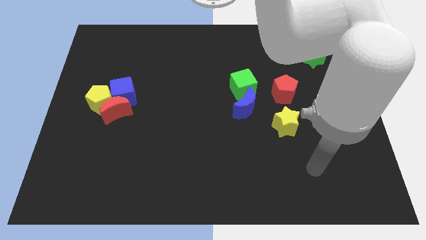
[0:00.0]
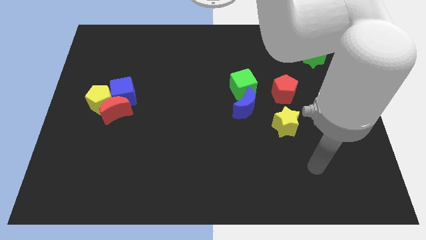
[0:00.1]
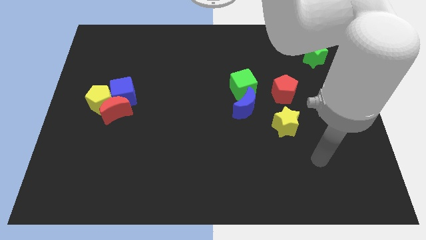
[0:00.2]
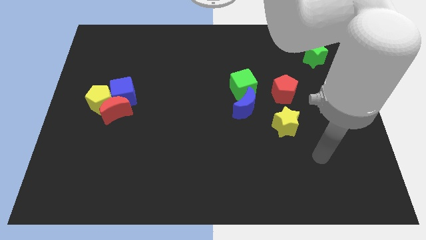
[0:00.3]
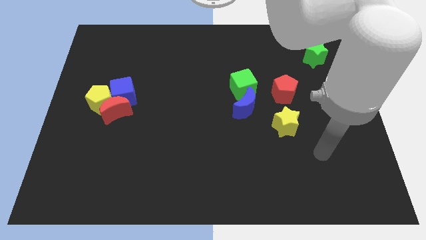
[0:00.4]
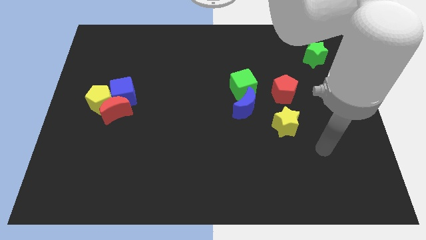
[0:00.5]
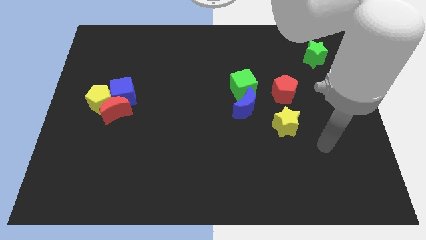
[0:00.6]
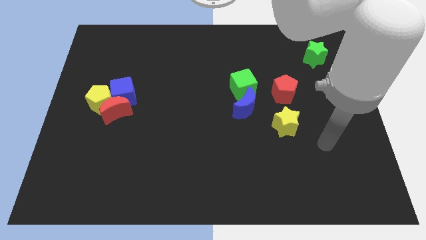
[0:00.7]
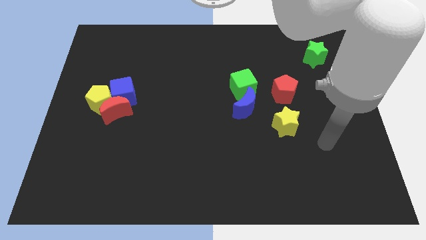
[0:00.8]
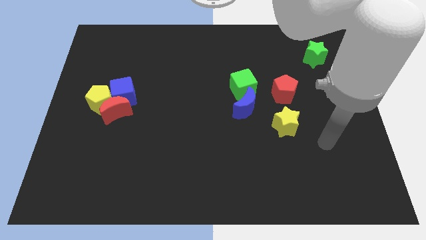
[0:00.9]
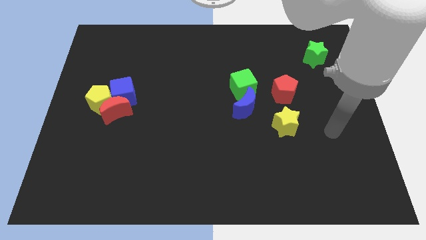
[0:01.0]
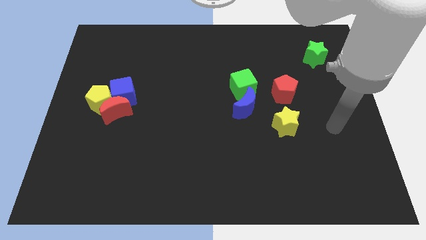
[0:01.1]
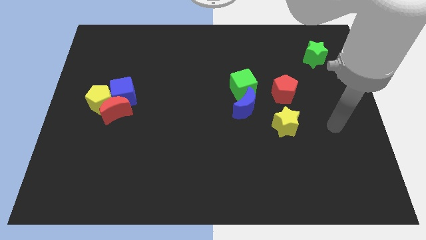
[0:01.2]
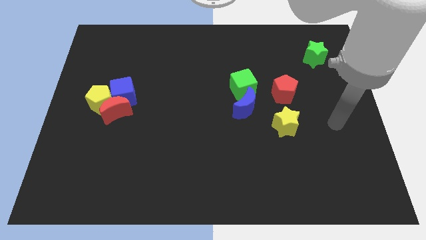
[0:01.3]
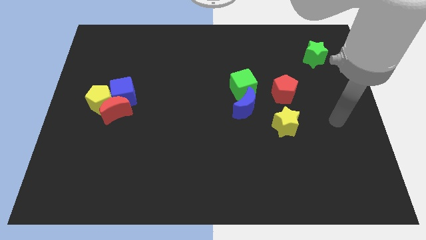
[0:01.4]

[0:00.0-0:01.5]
point your arm to the right of the yellow star

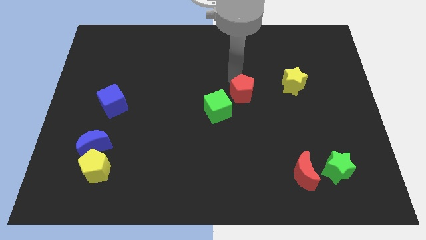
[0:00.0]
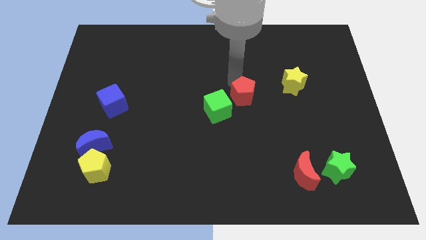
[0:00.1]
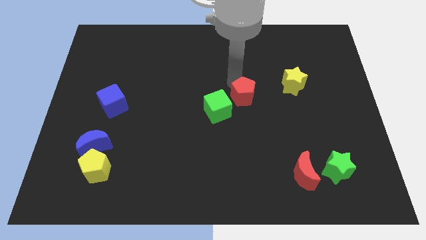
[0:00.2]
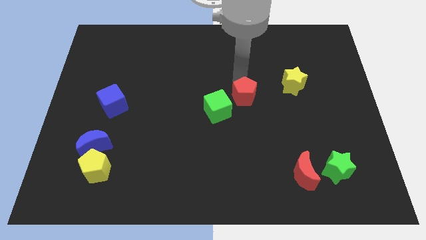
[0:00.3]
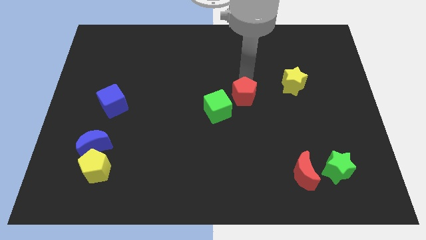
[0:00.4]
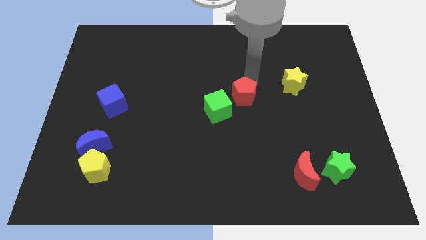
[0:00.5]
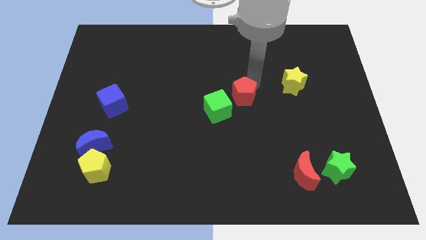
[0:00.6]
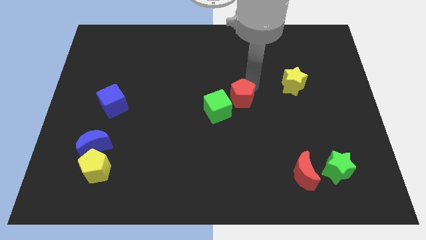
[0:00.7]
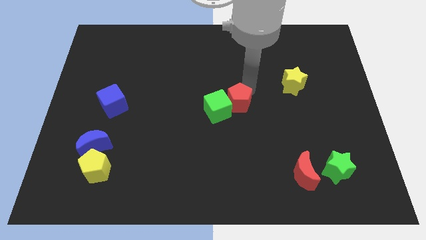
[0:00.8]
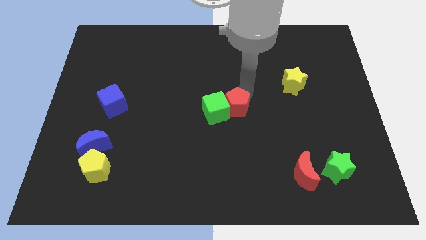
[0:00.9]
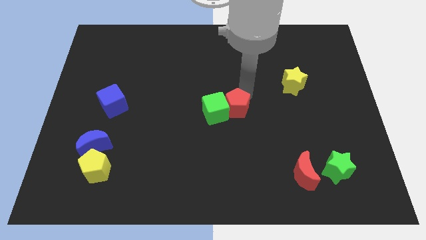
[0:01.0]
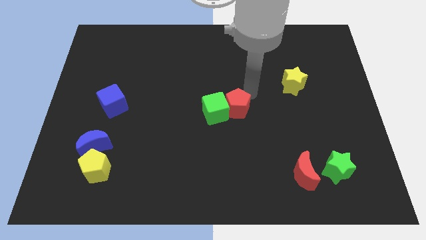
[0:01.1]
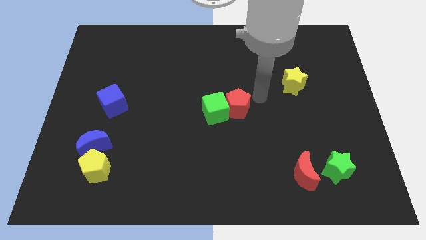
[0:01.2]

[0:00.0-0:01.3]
attach the red pentagon to the green cube

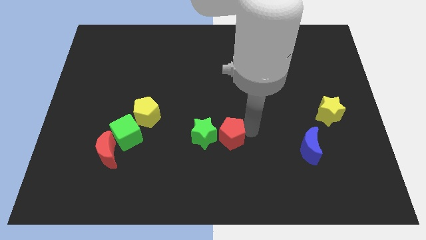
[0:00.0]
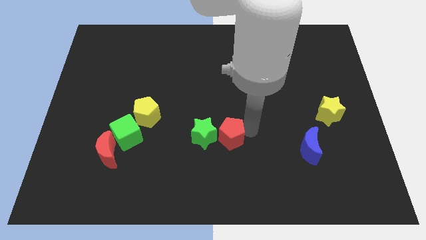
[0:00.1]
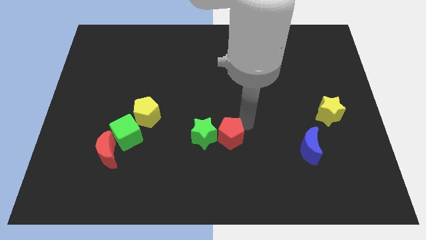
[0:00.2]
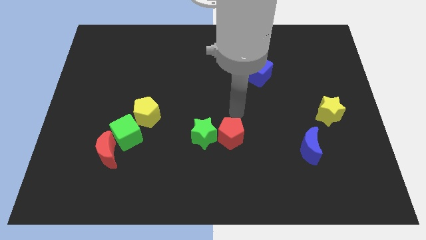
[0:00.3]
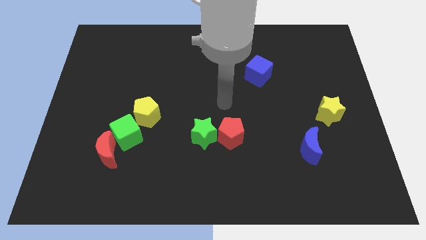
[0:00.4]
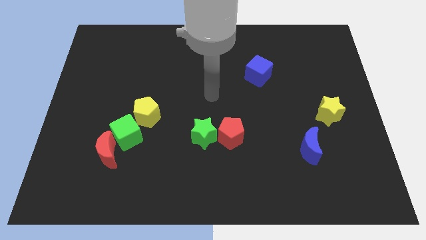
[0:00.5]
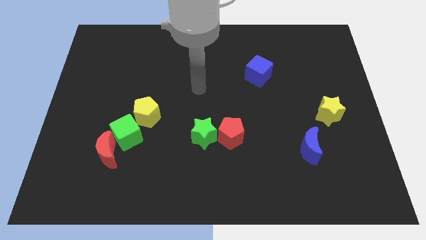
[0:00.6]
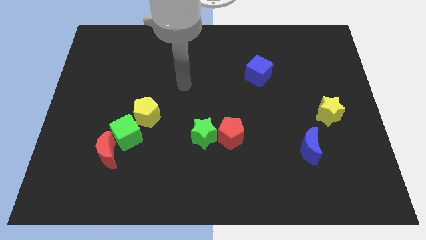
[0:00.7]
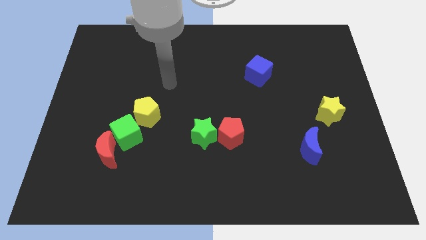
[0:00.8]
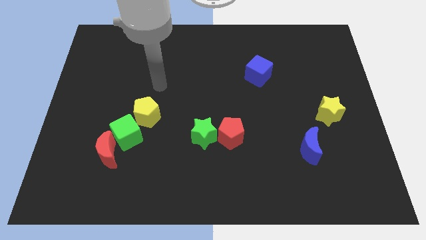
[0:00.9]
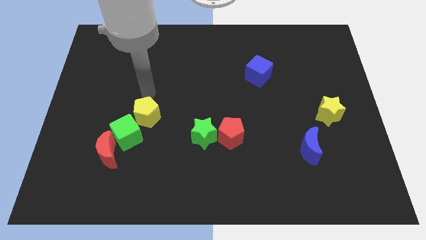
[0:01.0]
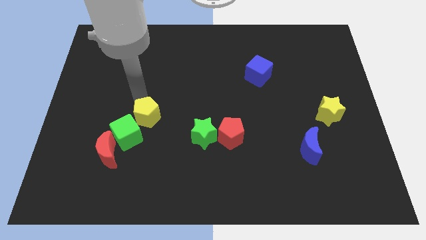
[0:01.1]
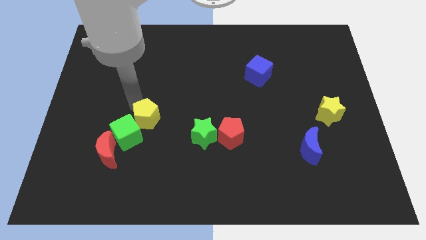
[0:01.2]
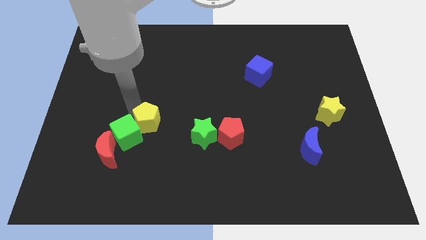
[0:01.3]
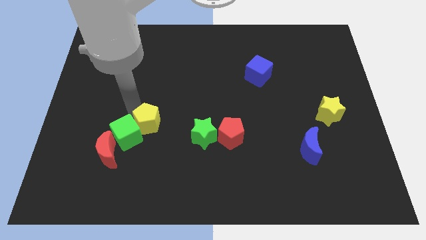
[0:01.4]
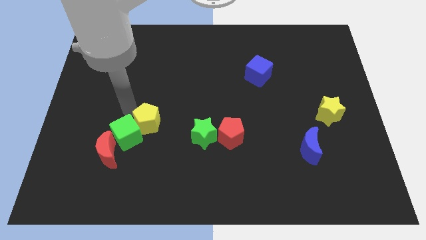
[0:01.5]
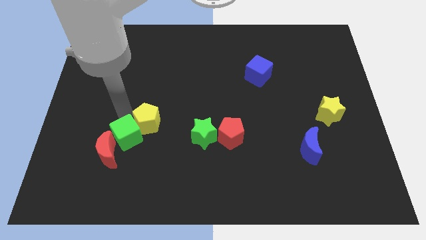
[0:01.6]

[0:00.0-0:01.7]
move the arm to the top of the yellow pentagon

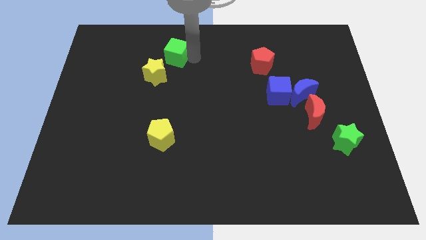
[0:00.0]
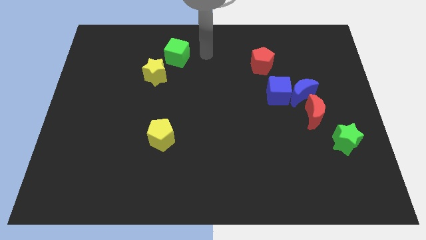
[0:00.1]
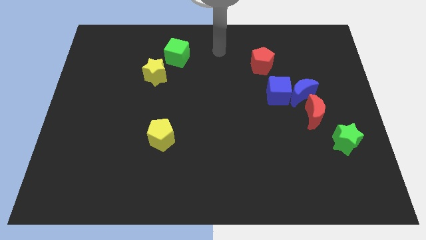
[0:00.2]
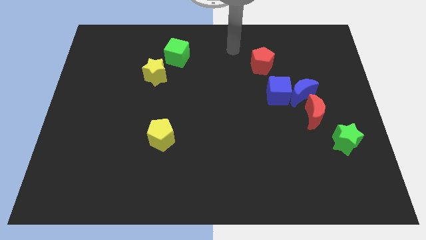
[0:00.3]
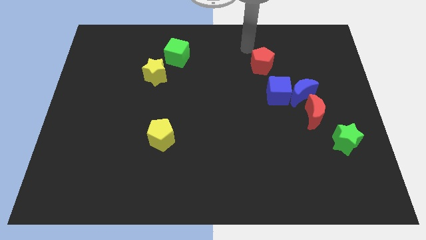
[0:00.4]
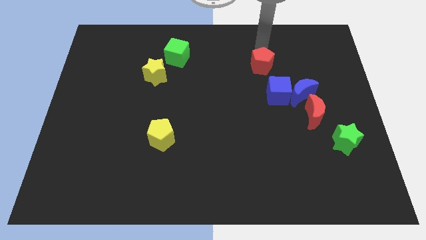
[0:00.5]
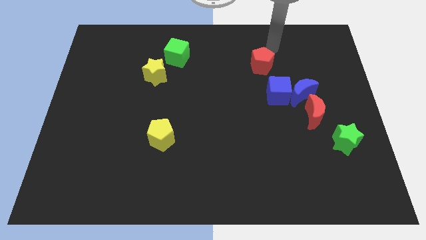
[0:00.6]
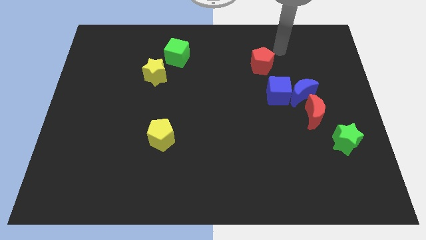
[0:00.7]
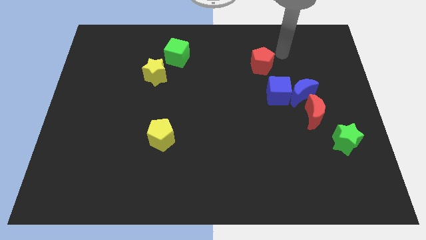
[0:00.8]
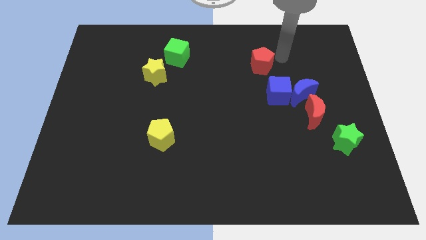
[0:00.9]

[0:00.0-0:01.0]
place the arm at the right side of the red pentagon

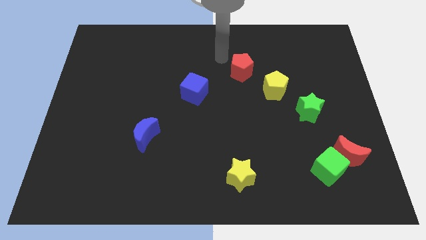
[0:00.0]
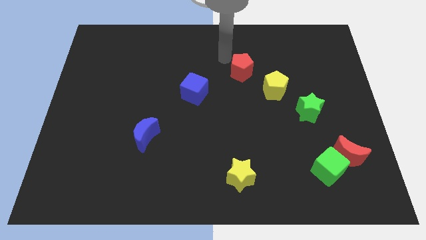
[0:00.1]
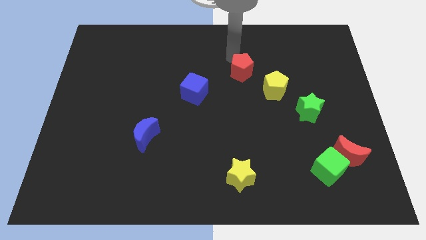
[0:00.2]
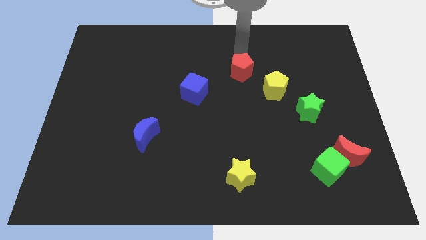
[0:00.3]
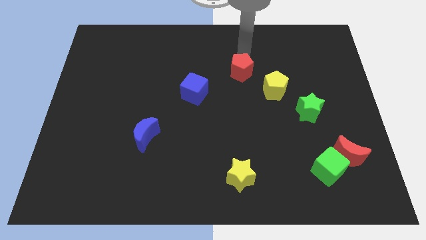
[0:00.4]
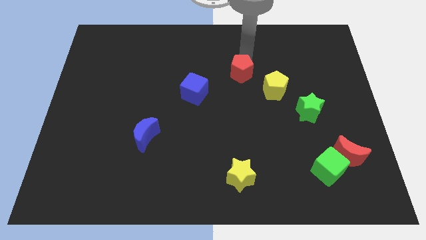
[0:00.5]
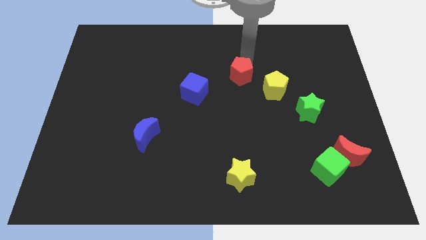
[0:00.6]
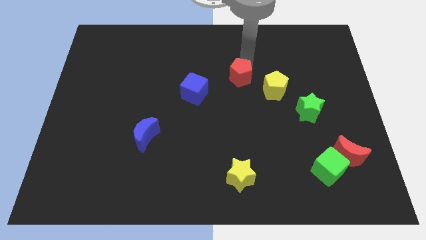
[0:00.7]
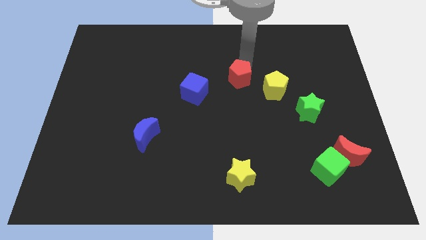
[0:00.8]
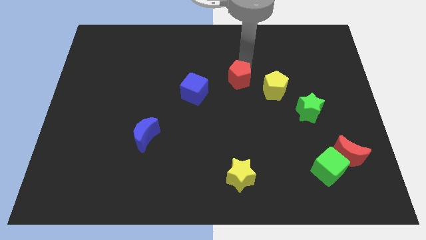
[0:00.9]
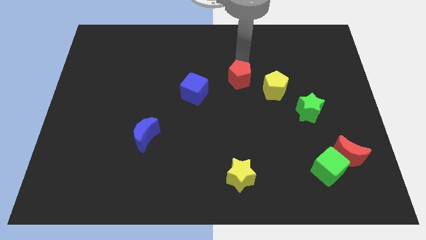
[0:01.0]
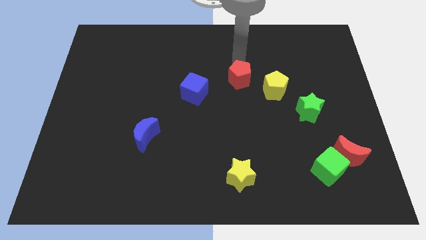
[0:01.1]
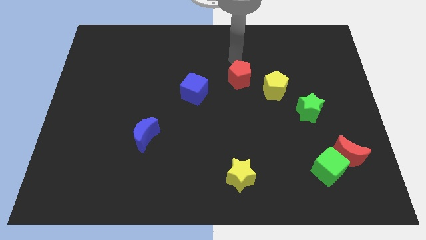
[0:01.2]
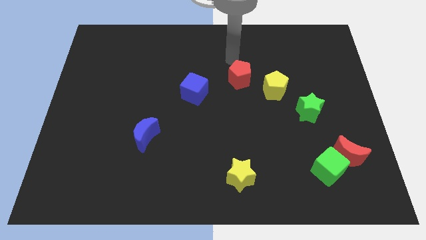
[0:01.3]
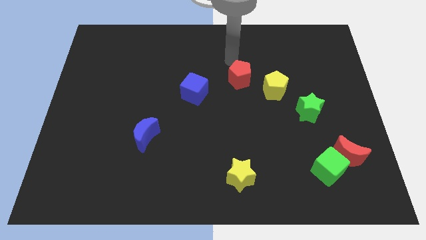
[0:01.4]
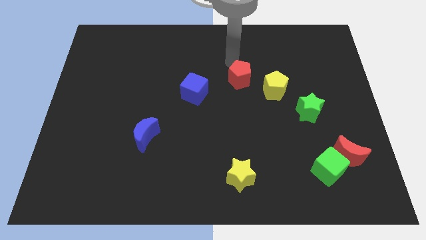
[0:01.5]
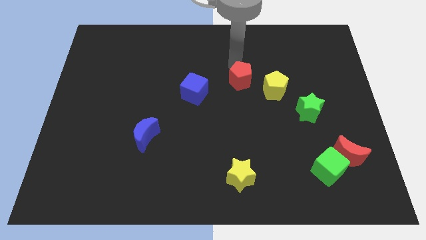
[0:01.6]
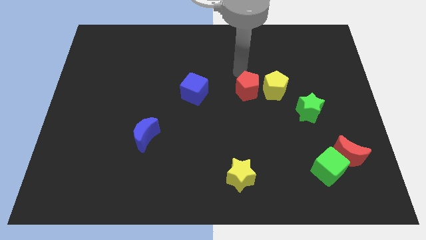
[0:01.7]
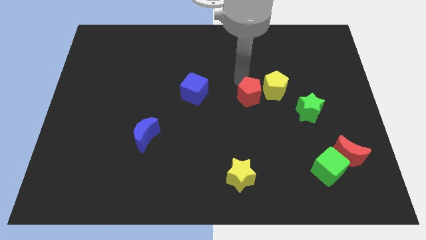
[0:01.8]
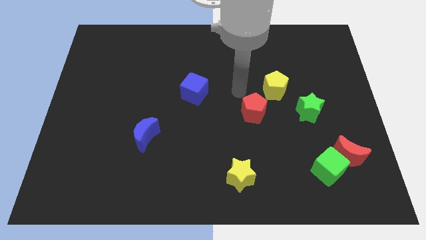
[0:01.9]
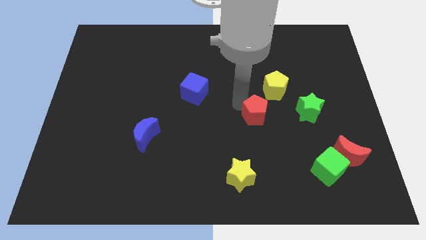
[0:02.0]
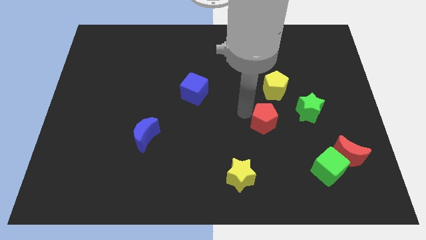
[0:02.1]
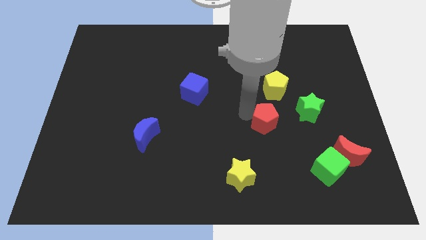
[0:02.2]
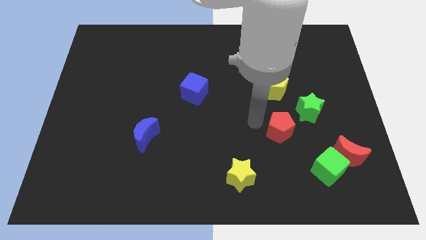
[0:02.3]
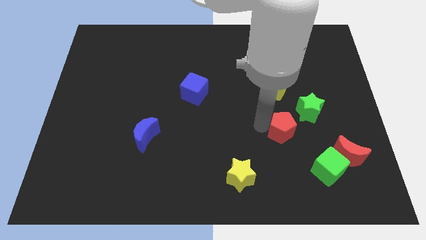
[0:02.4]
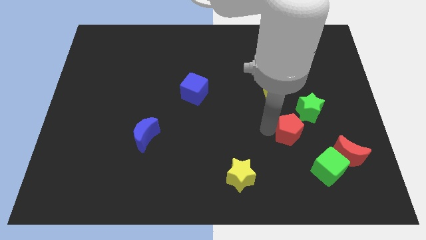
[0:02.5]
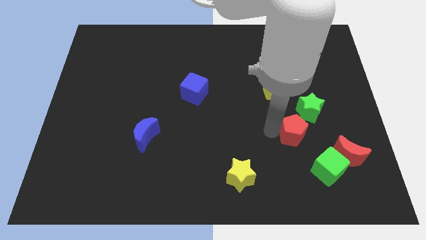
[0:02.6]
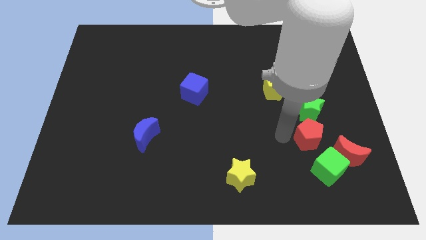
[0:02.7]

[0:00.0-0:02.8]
place the red pentagon at the top of the green cube

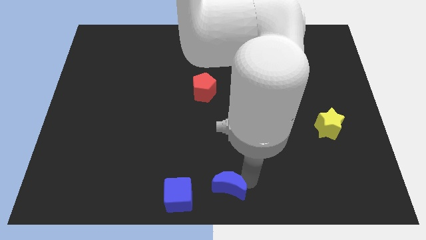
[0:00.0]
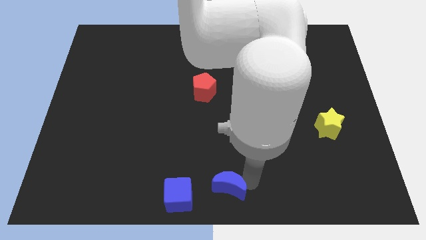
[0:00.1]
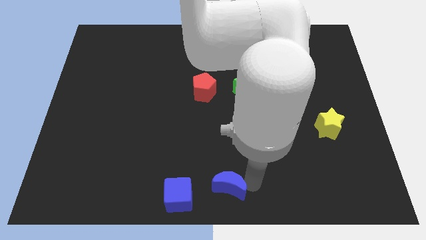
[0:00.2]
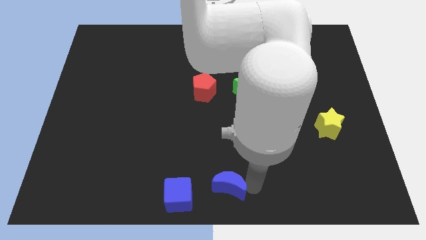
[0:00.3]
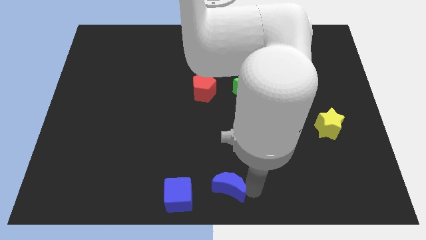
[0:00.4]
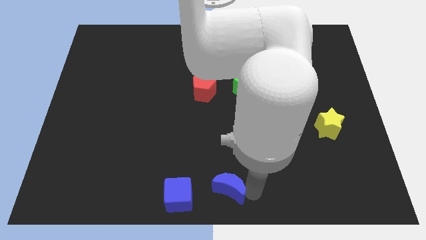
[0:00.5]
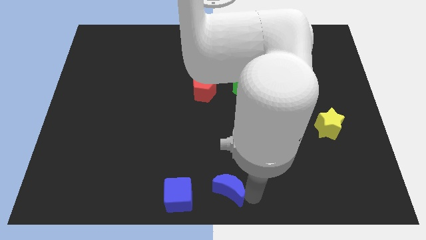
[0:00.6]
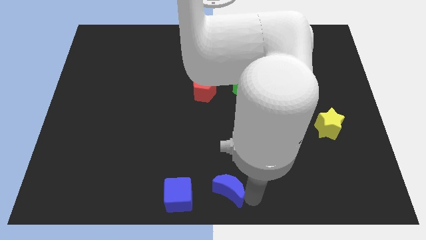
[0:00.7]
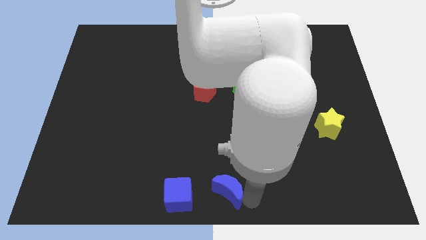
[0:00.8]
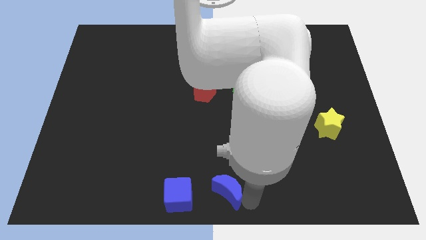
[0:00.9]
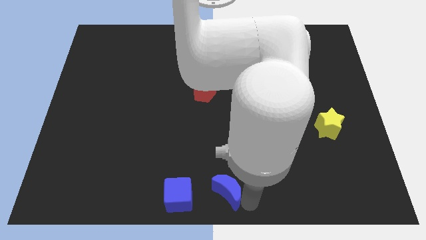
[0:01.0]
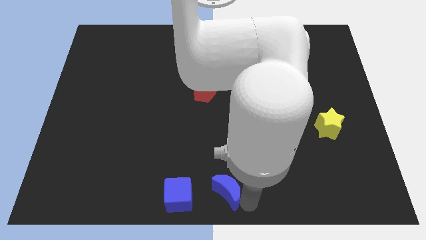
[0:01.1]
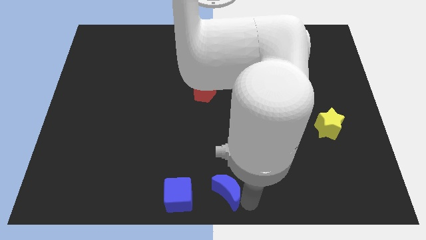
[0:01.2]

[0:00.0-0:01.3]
move blue moon to the center bottom
